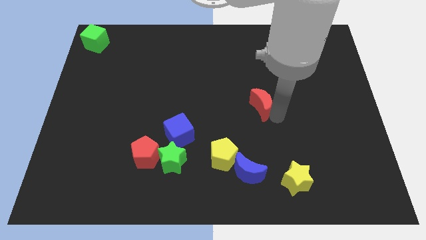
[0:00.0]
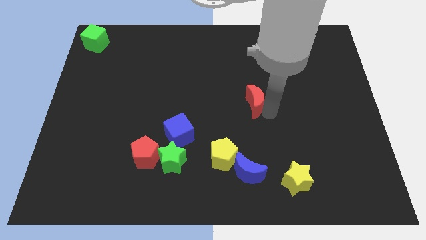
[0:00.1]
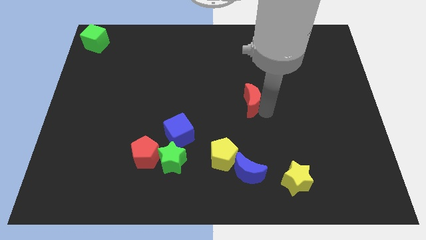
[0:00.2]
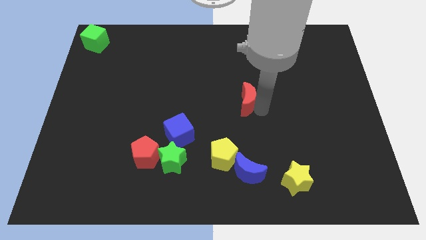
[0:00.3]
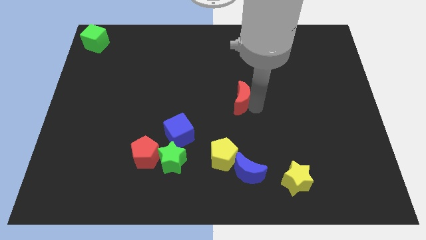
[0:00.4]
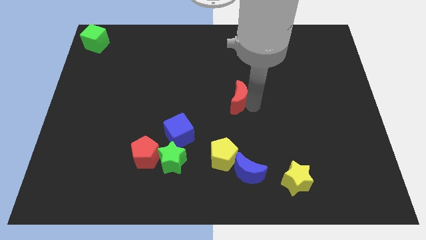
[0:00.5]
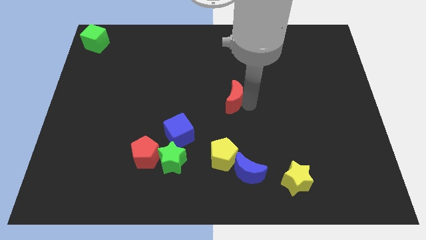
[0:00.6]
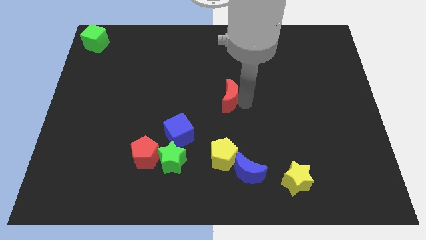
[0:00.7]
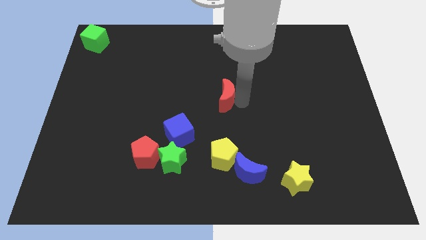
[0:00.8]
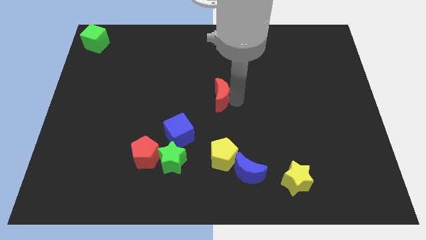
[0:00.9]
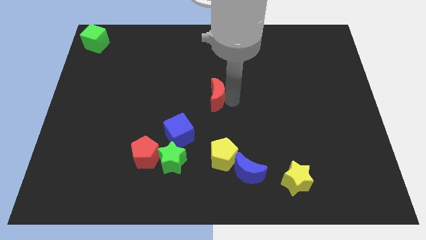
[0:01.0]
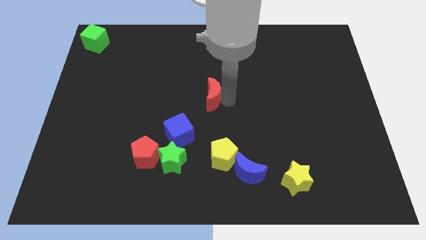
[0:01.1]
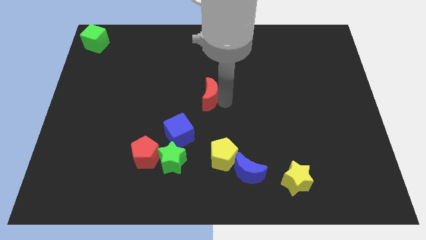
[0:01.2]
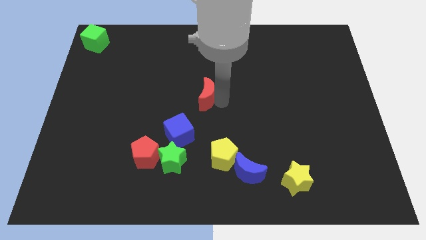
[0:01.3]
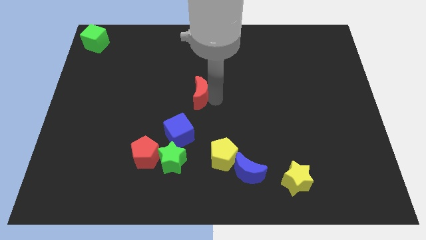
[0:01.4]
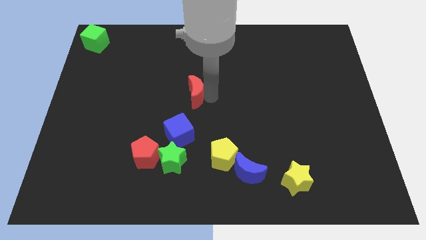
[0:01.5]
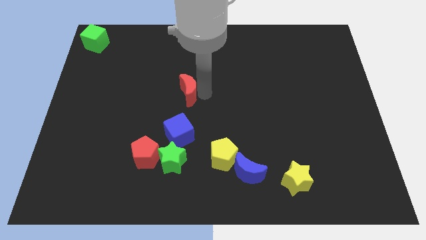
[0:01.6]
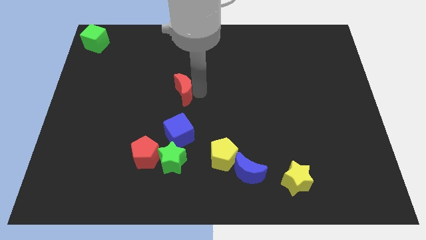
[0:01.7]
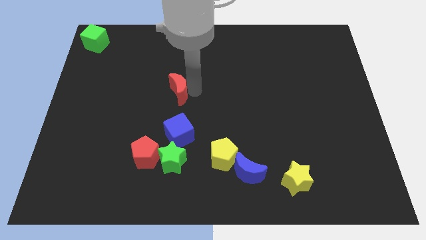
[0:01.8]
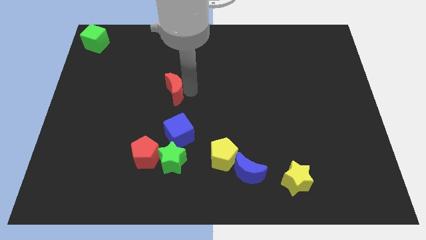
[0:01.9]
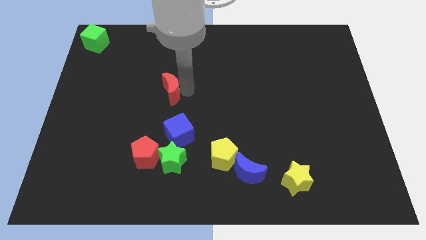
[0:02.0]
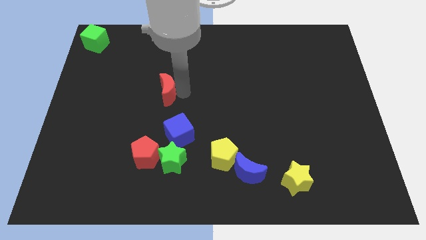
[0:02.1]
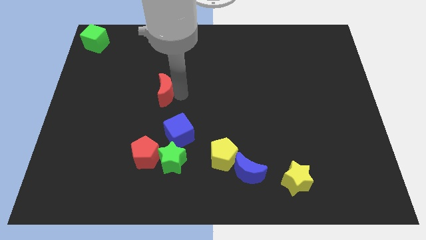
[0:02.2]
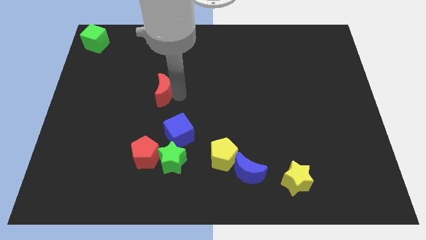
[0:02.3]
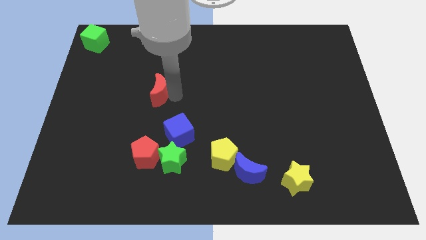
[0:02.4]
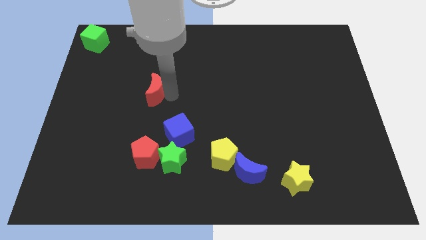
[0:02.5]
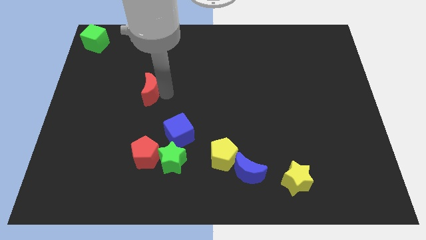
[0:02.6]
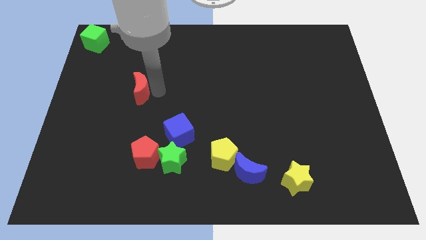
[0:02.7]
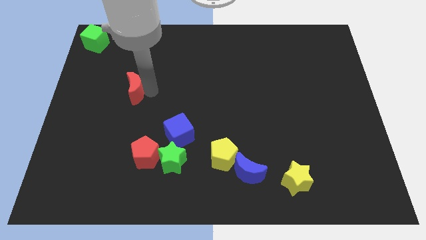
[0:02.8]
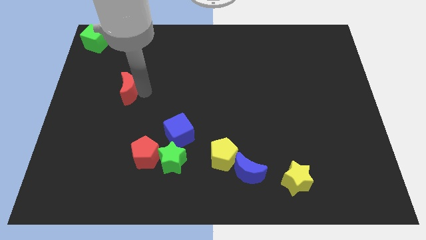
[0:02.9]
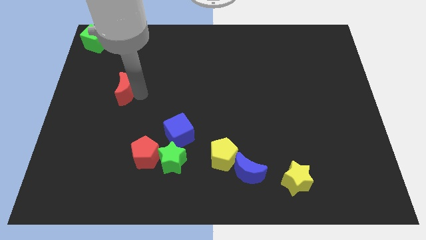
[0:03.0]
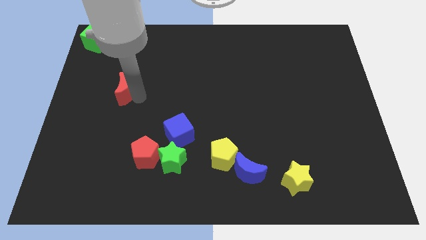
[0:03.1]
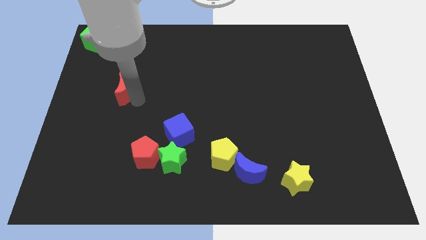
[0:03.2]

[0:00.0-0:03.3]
drag the red moon towards the green cube

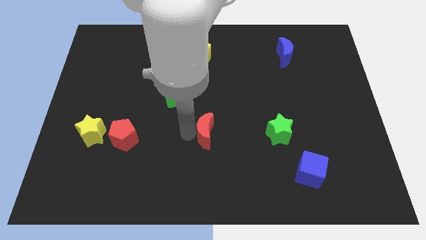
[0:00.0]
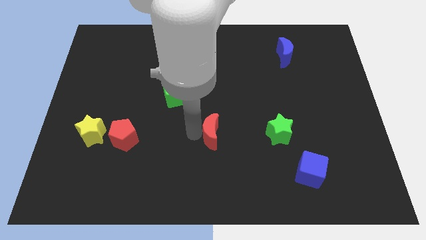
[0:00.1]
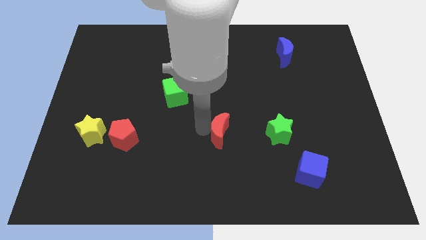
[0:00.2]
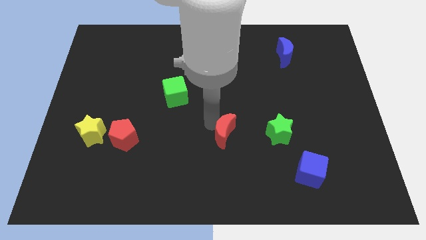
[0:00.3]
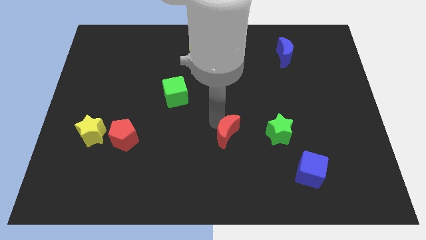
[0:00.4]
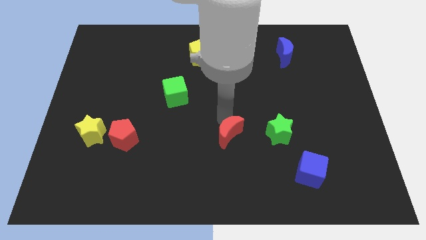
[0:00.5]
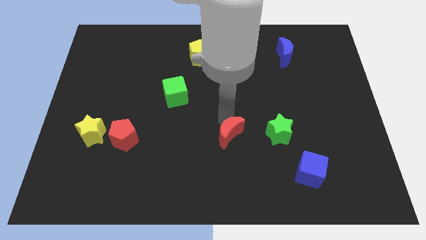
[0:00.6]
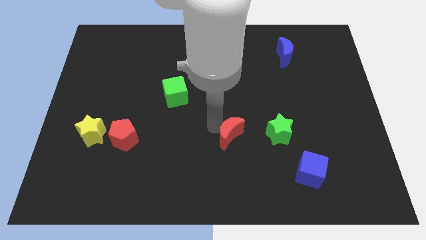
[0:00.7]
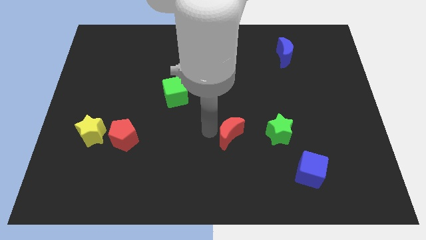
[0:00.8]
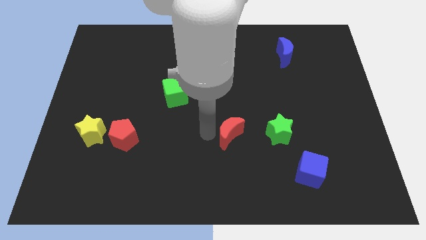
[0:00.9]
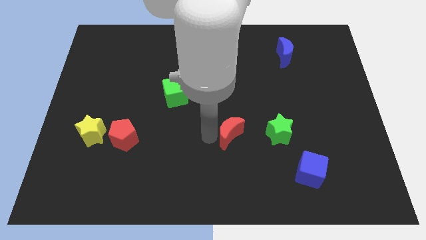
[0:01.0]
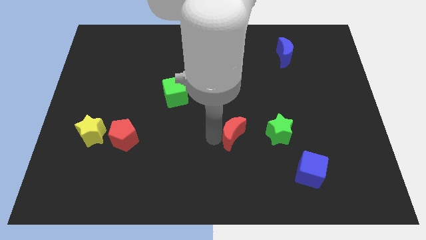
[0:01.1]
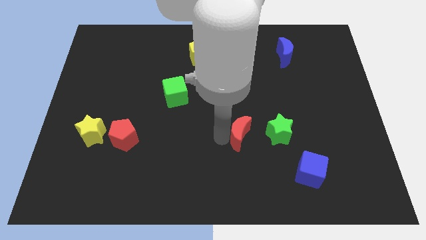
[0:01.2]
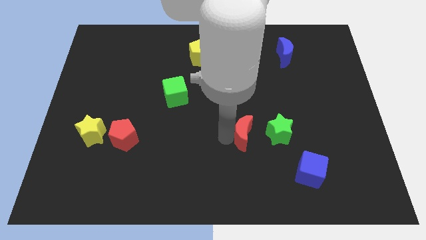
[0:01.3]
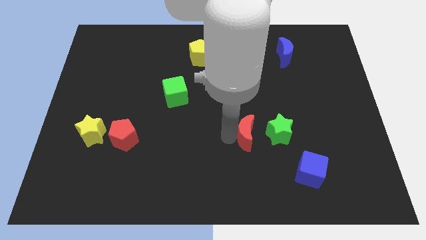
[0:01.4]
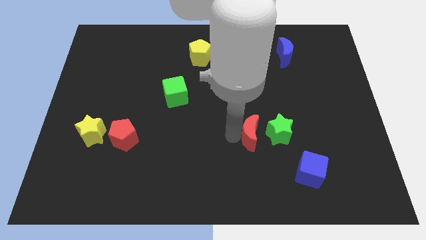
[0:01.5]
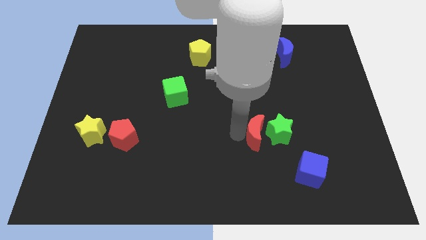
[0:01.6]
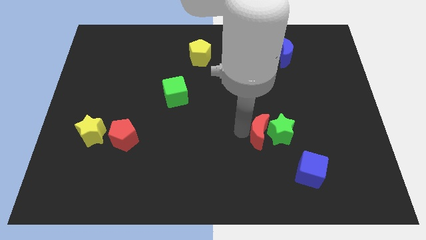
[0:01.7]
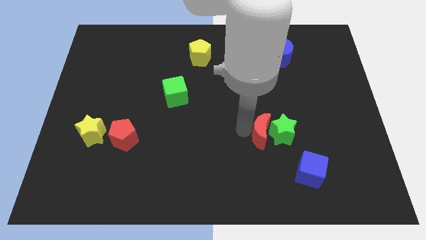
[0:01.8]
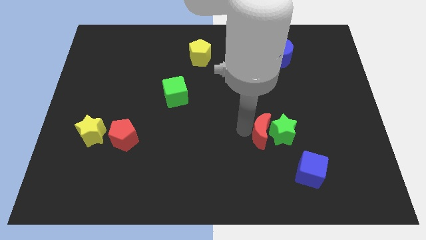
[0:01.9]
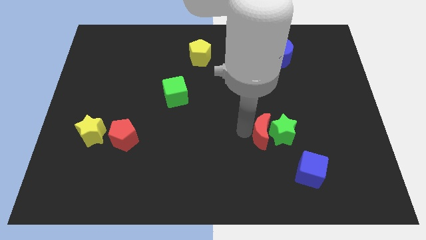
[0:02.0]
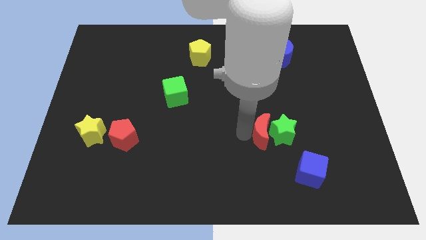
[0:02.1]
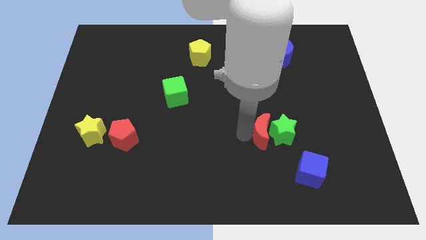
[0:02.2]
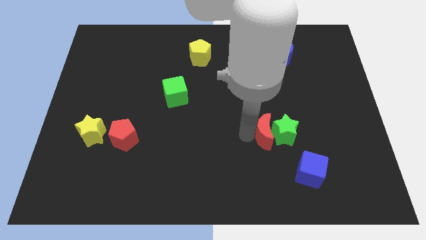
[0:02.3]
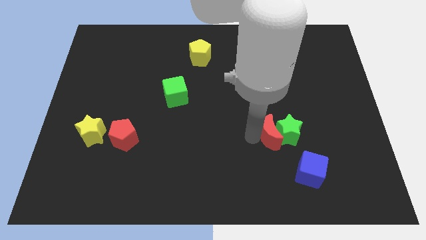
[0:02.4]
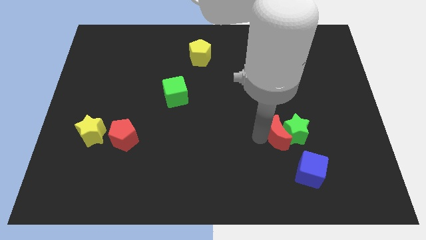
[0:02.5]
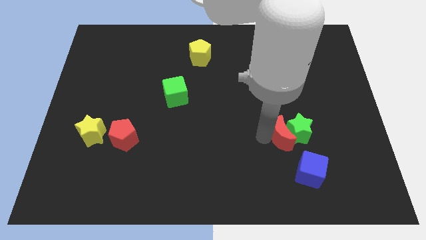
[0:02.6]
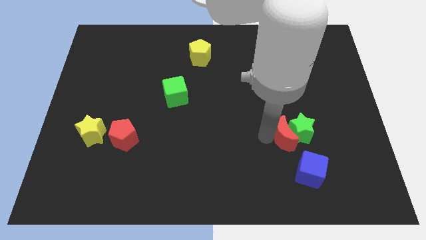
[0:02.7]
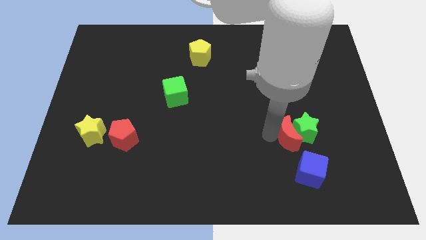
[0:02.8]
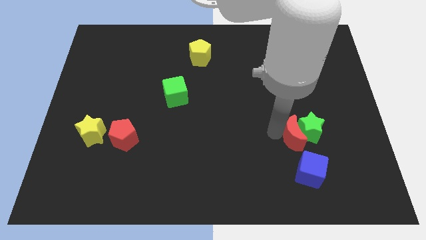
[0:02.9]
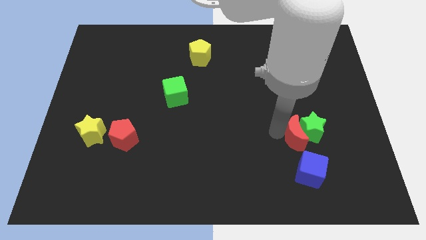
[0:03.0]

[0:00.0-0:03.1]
move the red crescent into the green star

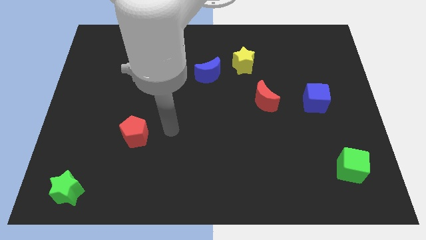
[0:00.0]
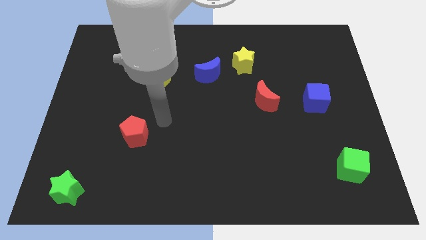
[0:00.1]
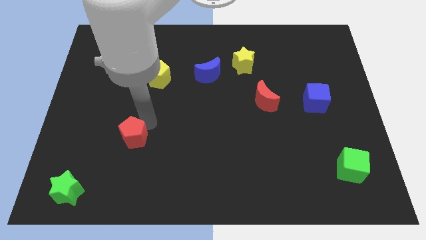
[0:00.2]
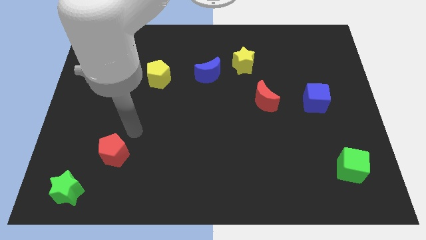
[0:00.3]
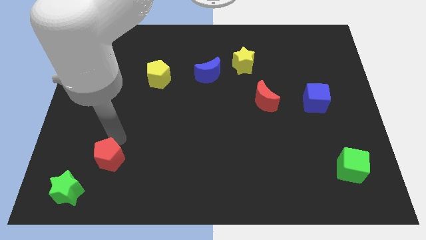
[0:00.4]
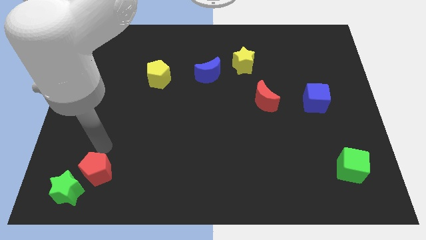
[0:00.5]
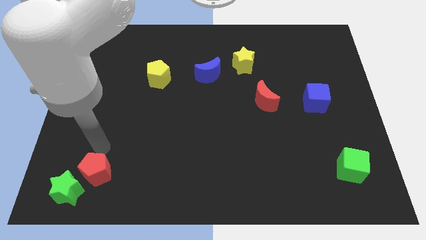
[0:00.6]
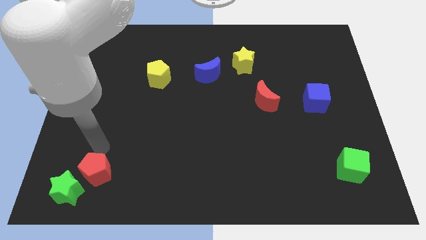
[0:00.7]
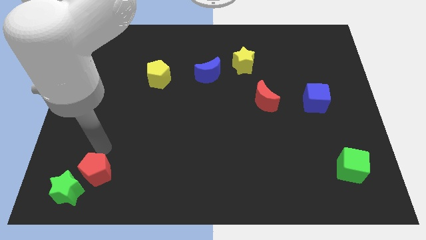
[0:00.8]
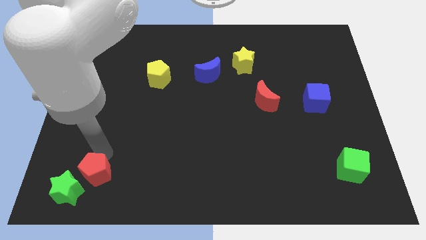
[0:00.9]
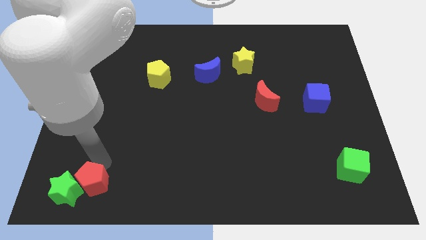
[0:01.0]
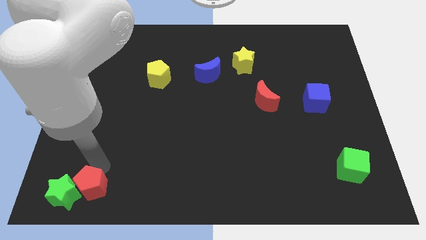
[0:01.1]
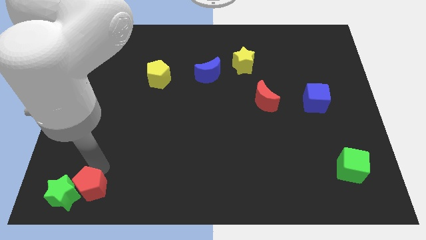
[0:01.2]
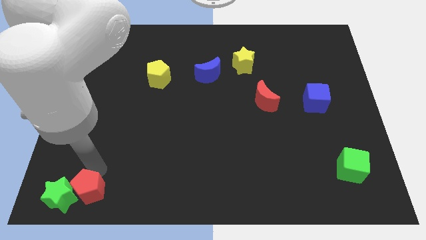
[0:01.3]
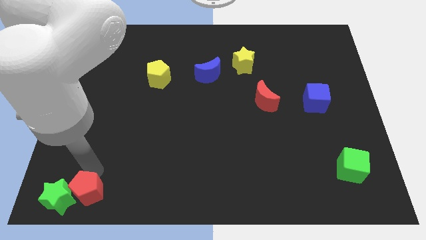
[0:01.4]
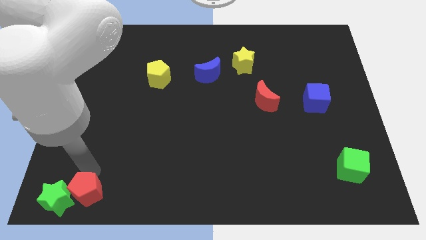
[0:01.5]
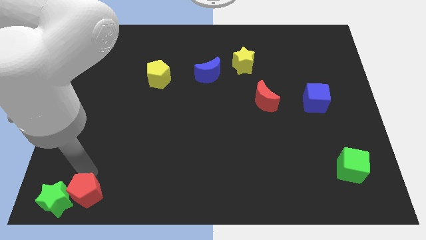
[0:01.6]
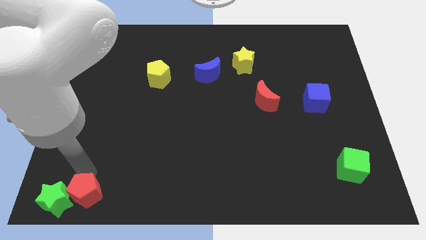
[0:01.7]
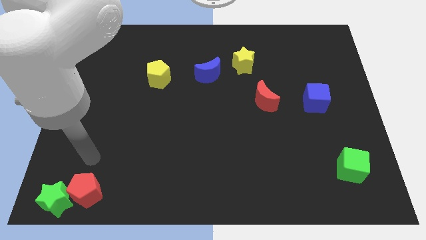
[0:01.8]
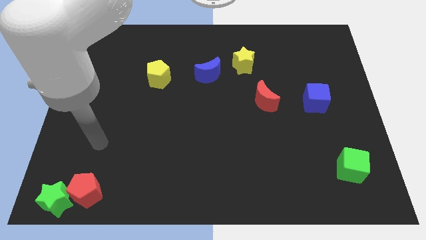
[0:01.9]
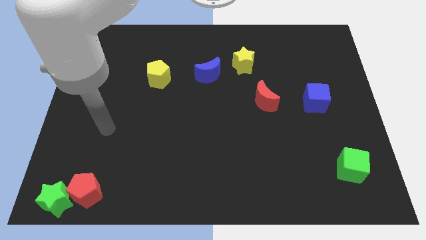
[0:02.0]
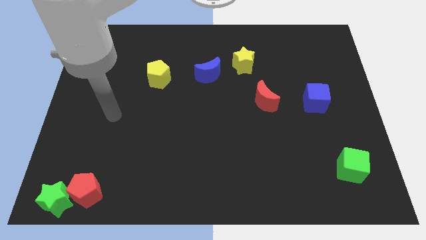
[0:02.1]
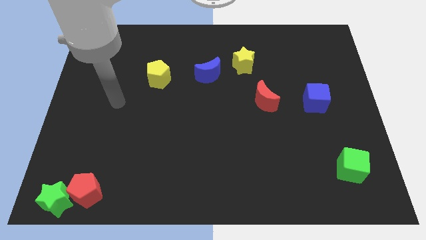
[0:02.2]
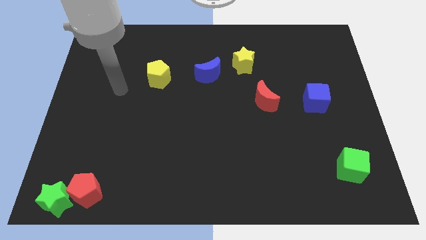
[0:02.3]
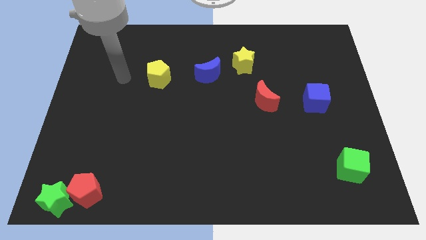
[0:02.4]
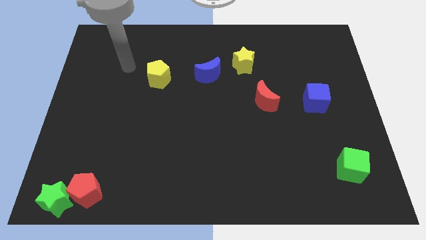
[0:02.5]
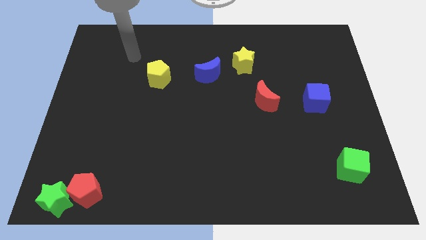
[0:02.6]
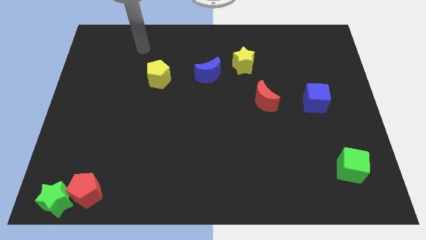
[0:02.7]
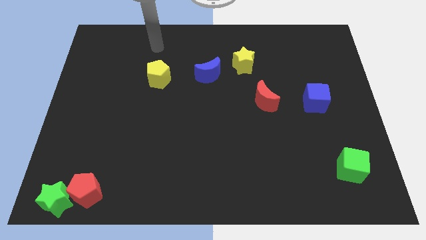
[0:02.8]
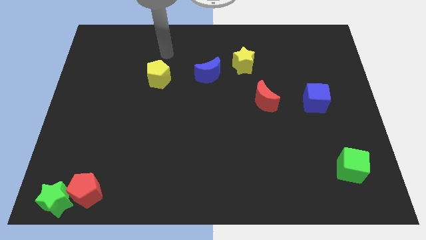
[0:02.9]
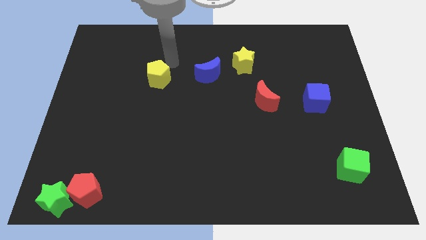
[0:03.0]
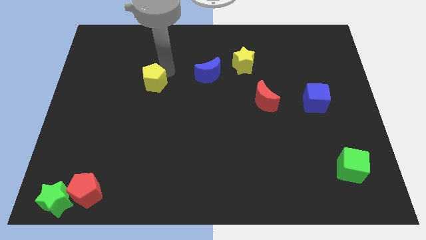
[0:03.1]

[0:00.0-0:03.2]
push the red pentagon into green star
